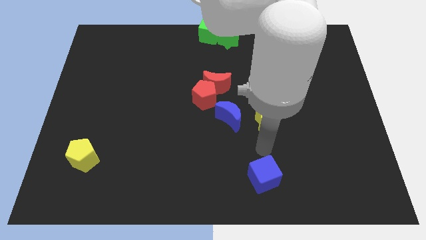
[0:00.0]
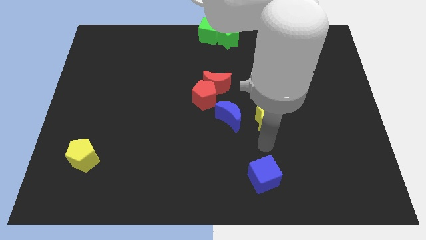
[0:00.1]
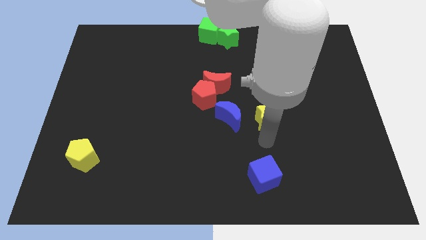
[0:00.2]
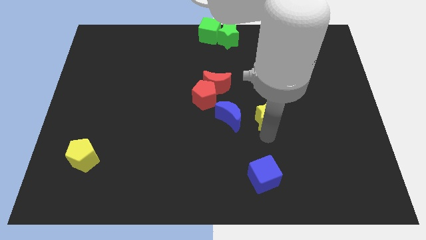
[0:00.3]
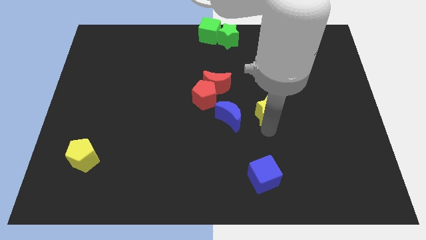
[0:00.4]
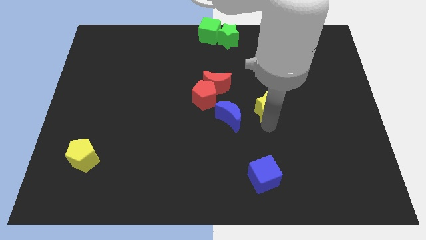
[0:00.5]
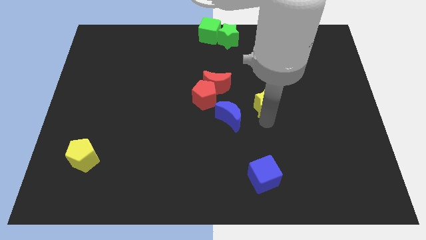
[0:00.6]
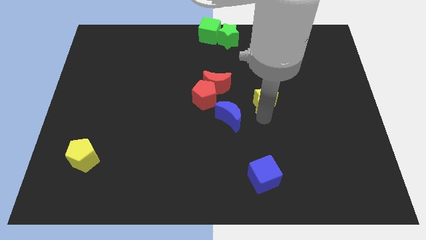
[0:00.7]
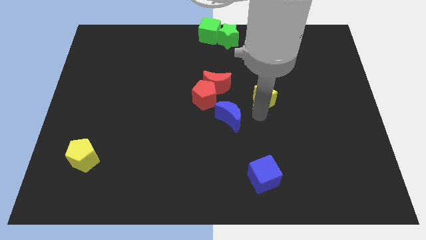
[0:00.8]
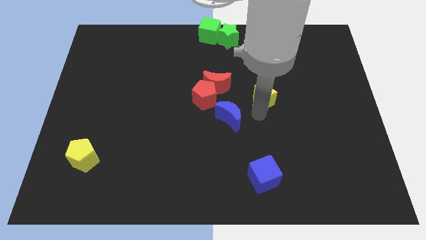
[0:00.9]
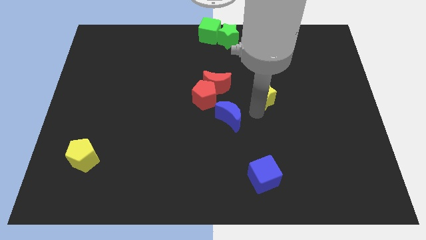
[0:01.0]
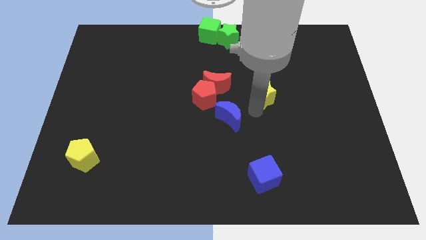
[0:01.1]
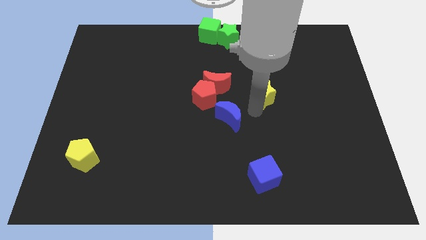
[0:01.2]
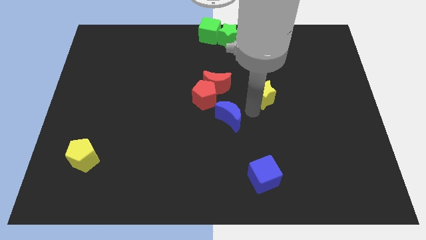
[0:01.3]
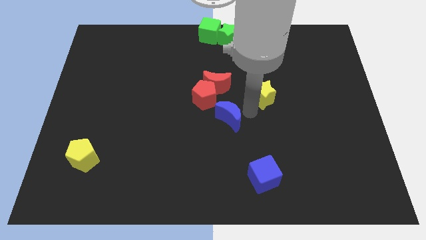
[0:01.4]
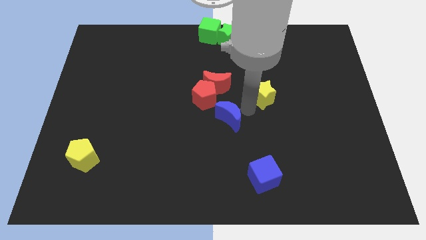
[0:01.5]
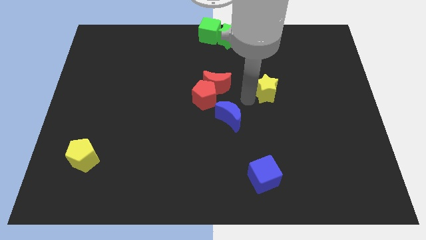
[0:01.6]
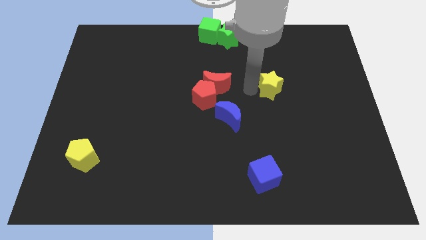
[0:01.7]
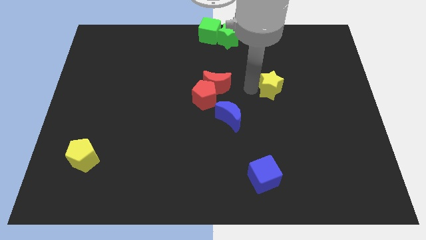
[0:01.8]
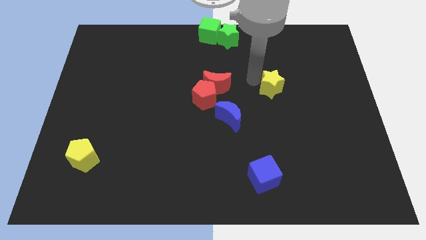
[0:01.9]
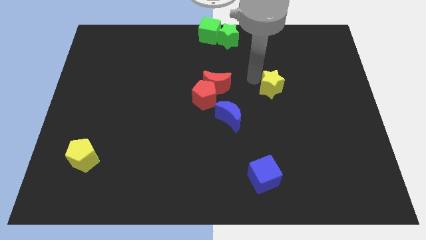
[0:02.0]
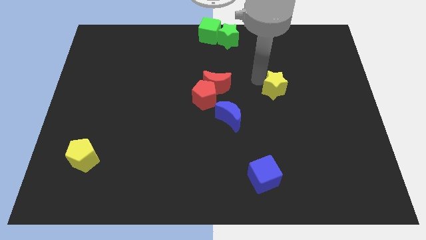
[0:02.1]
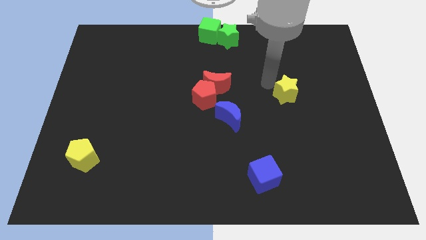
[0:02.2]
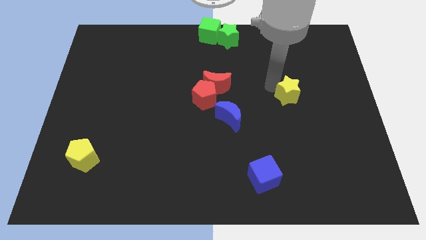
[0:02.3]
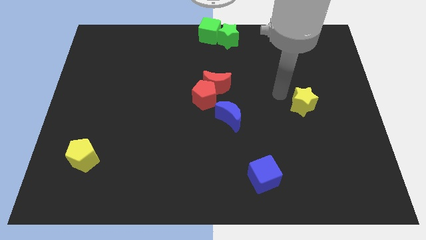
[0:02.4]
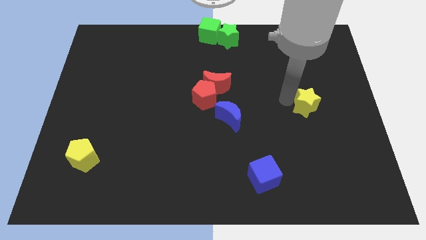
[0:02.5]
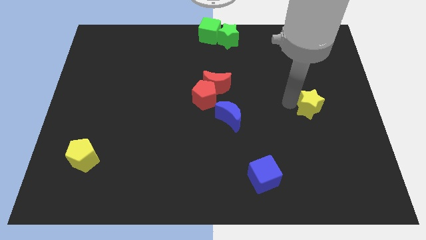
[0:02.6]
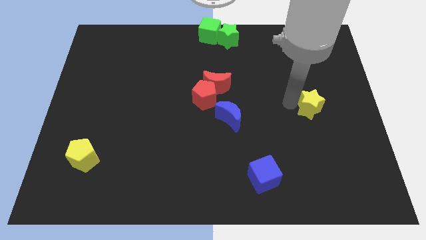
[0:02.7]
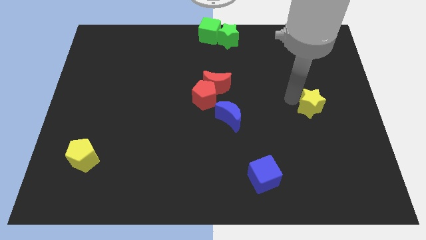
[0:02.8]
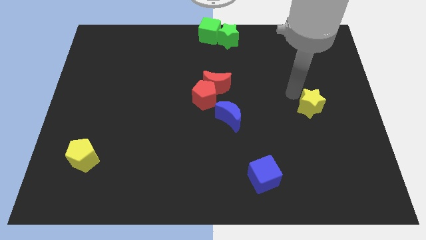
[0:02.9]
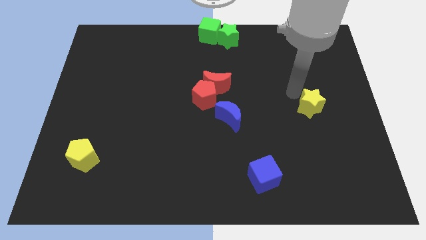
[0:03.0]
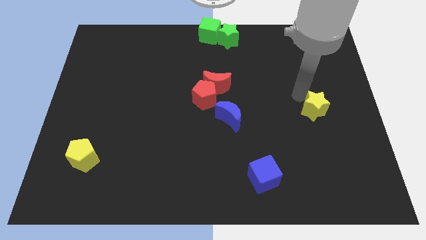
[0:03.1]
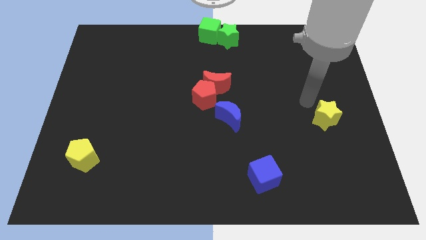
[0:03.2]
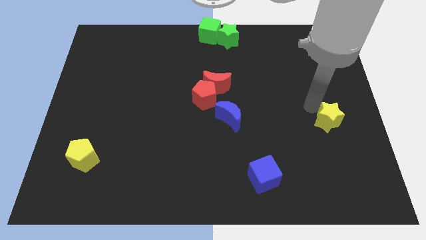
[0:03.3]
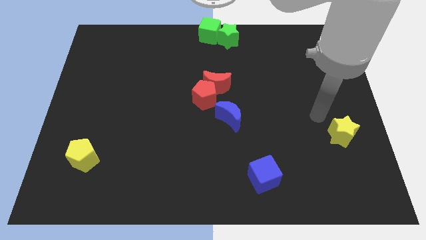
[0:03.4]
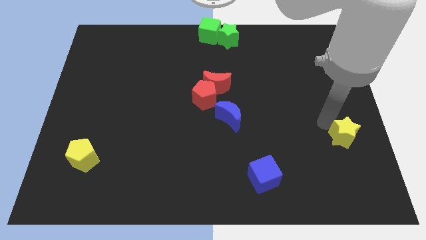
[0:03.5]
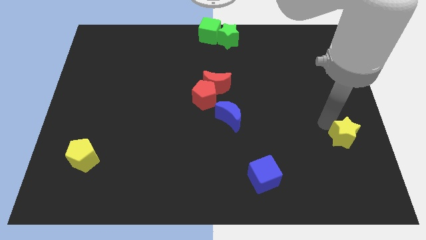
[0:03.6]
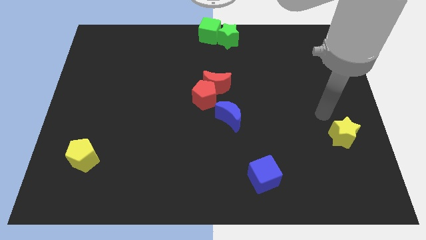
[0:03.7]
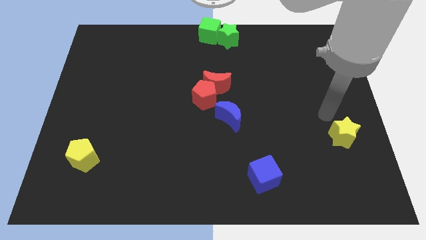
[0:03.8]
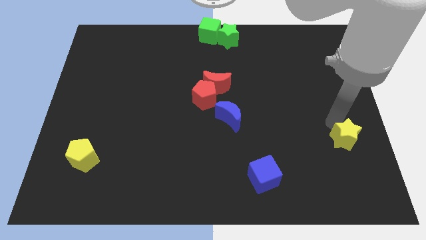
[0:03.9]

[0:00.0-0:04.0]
push the yellow star to the right

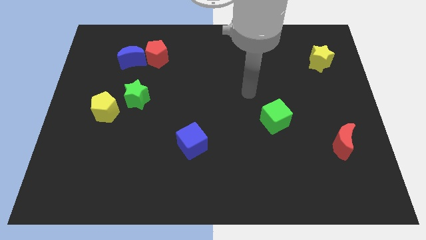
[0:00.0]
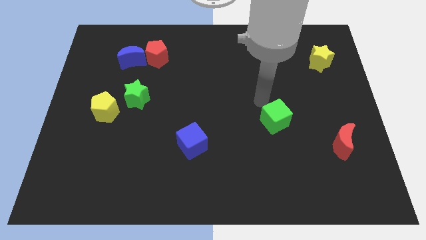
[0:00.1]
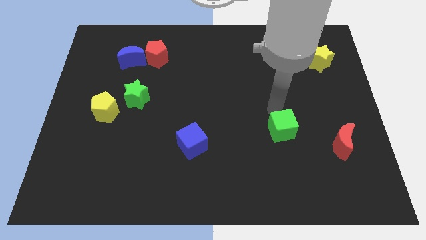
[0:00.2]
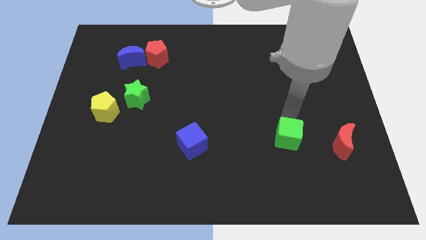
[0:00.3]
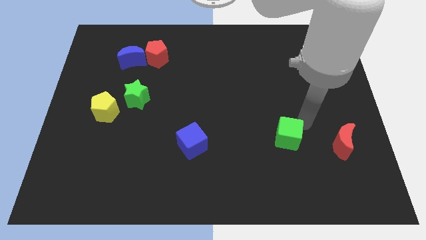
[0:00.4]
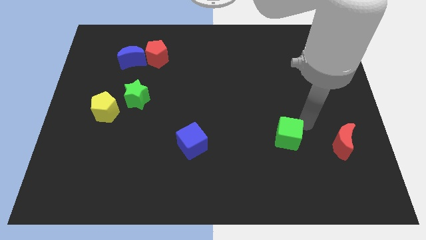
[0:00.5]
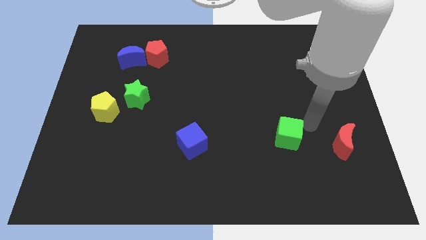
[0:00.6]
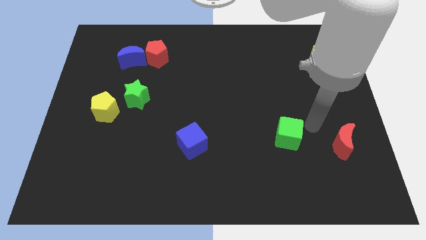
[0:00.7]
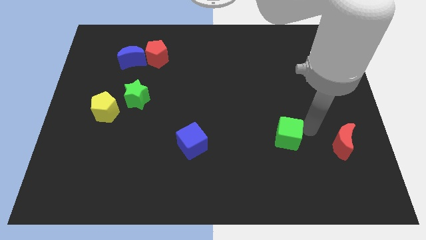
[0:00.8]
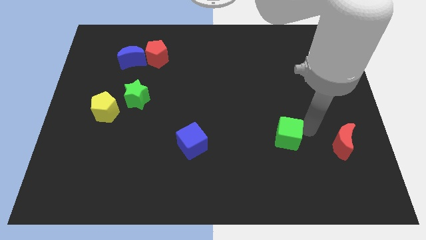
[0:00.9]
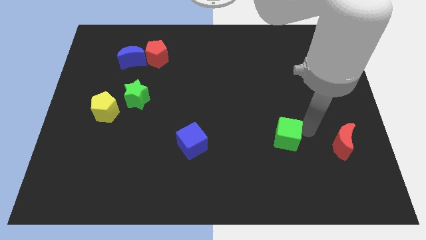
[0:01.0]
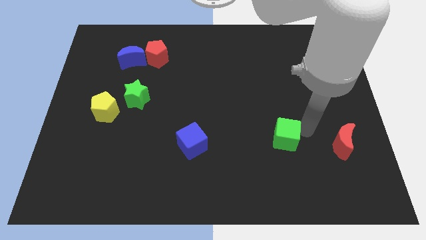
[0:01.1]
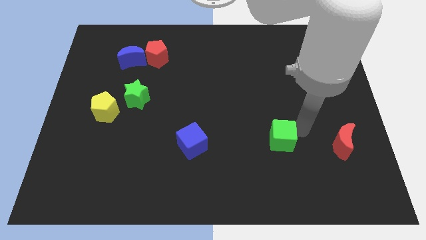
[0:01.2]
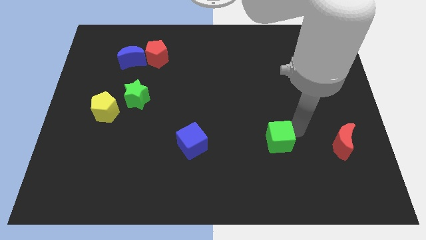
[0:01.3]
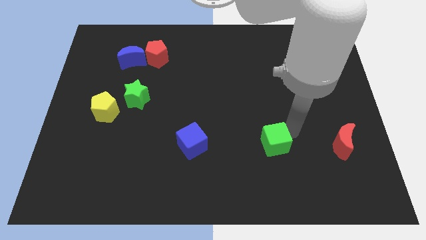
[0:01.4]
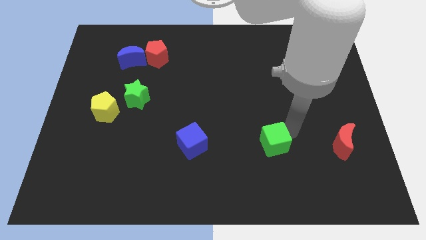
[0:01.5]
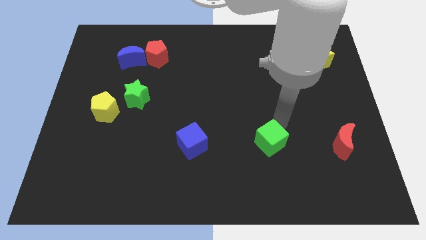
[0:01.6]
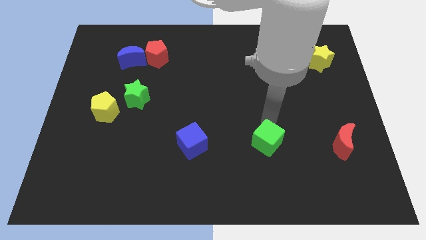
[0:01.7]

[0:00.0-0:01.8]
place the green cube in between the blue cube and red moon

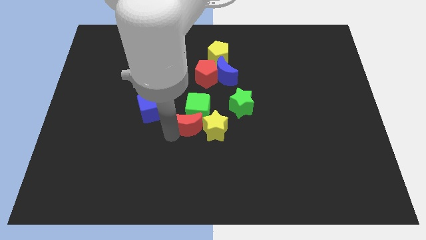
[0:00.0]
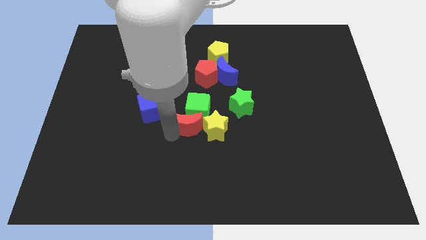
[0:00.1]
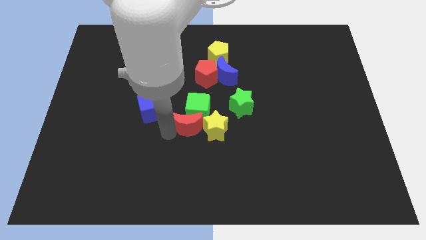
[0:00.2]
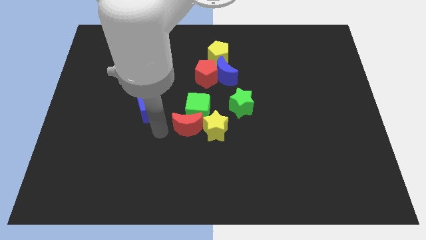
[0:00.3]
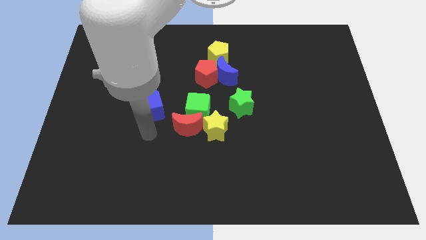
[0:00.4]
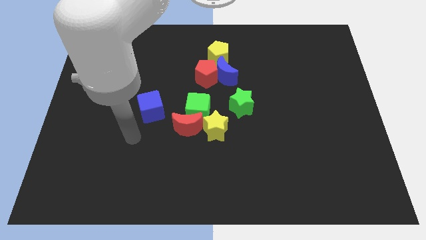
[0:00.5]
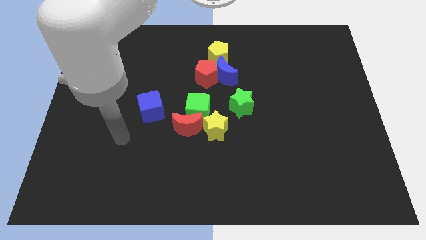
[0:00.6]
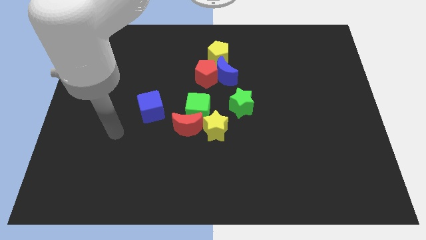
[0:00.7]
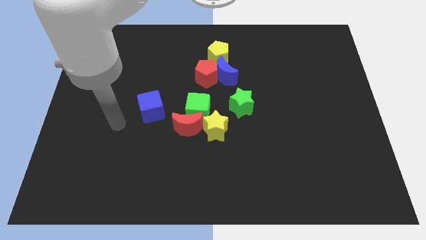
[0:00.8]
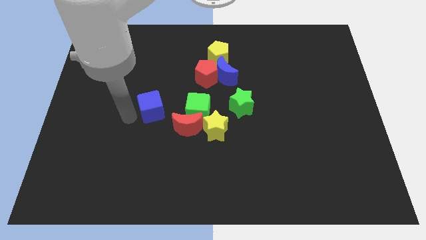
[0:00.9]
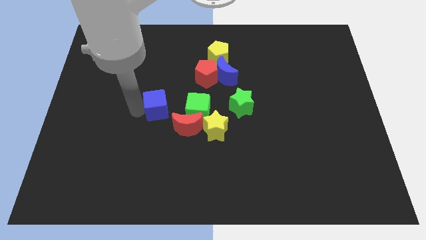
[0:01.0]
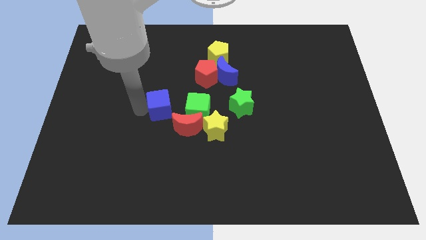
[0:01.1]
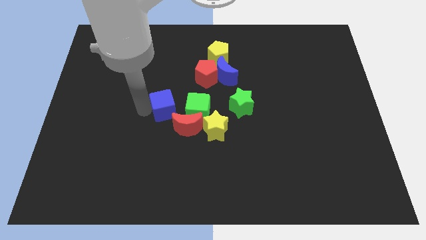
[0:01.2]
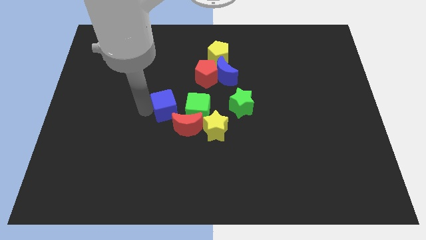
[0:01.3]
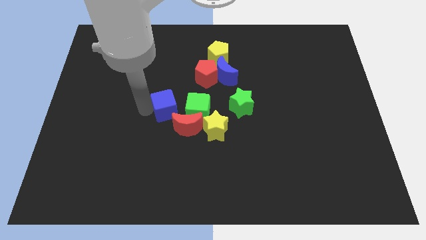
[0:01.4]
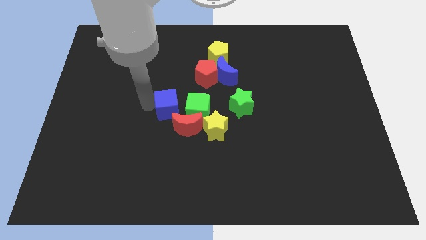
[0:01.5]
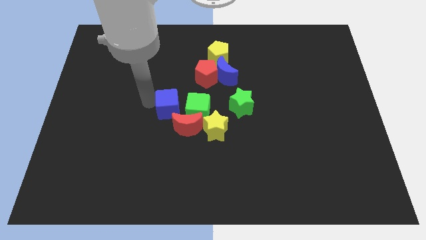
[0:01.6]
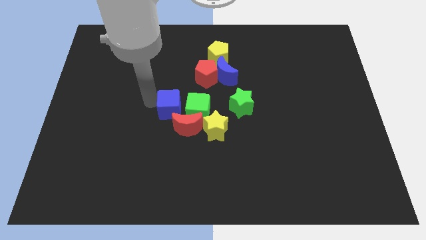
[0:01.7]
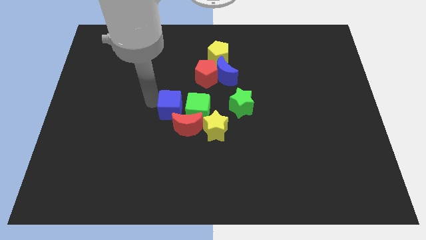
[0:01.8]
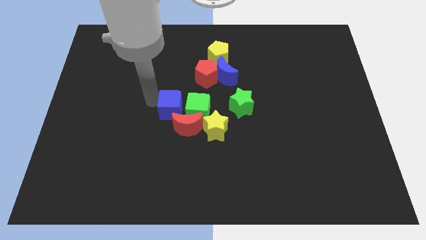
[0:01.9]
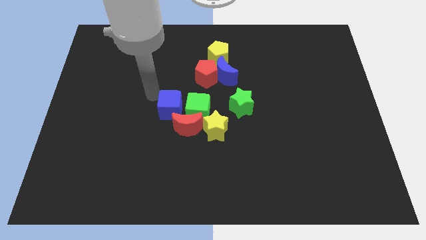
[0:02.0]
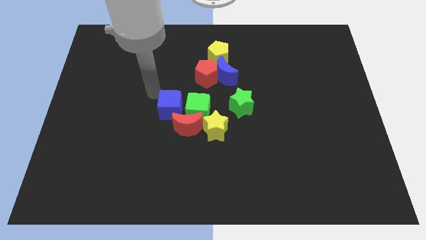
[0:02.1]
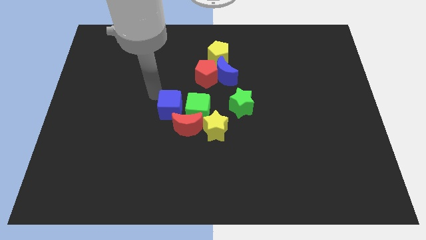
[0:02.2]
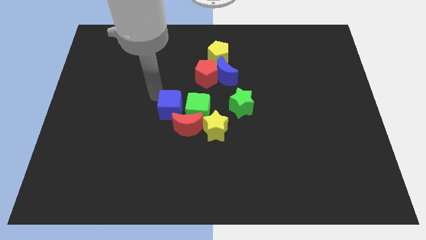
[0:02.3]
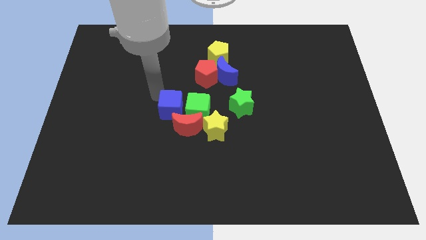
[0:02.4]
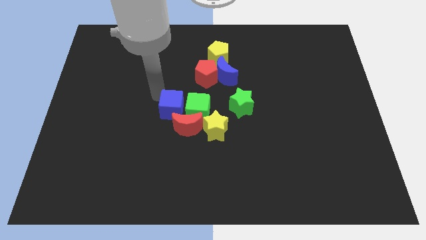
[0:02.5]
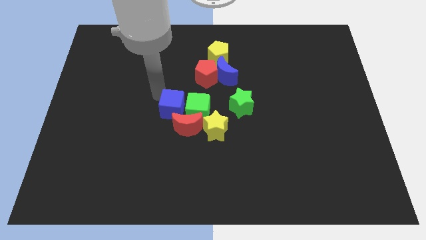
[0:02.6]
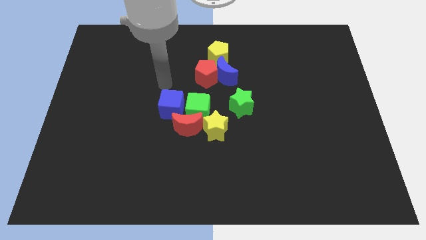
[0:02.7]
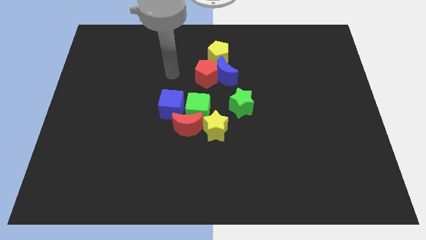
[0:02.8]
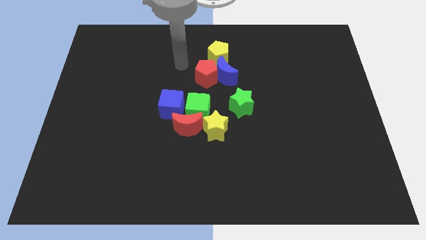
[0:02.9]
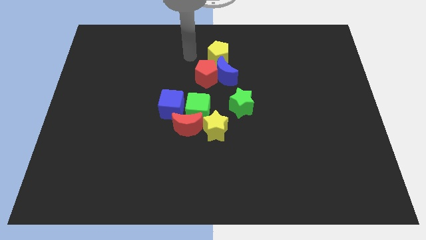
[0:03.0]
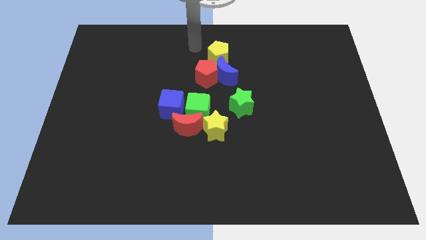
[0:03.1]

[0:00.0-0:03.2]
push the blue cube to the left of green cube

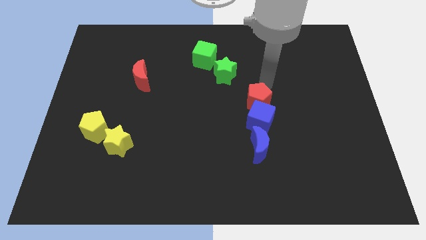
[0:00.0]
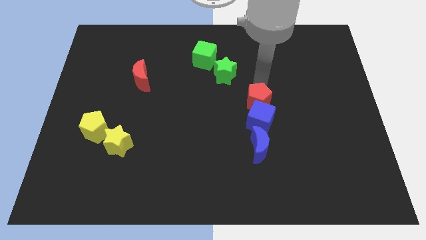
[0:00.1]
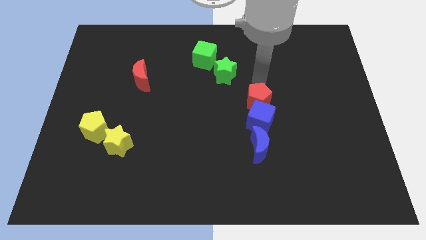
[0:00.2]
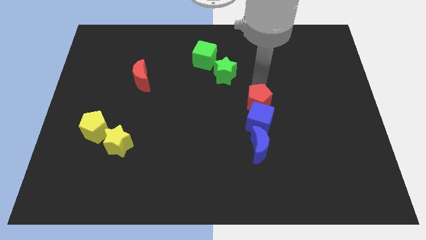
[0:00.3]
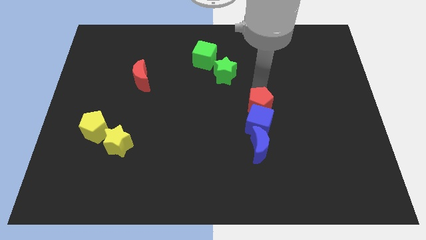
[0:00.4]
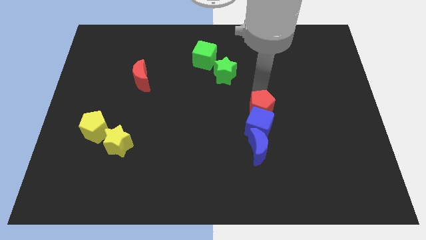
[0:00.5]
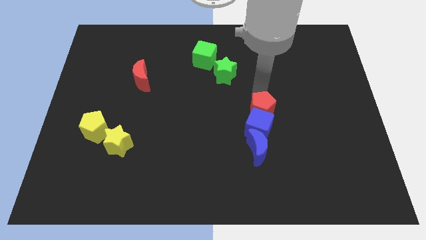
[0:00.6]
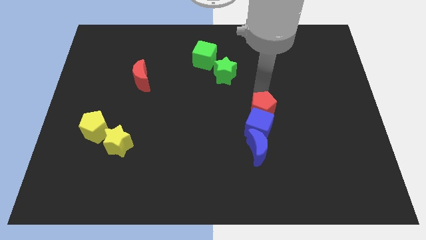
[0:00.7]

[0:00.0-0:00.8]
push the vertical line of blocks to the down
